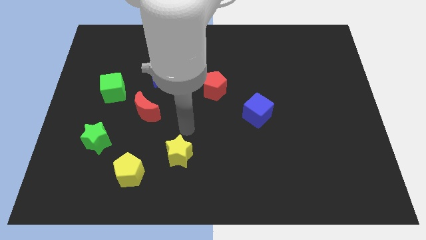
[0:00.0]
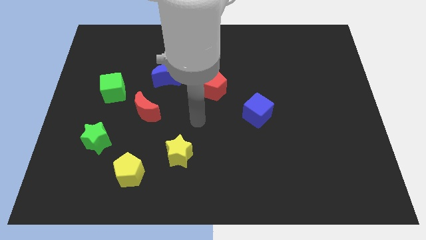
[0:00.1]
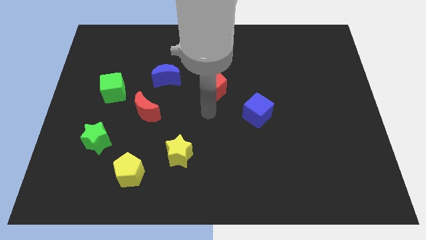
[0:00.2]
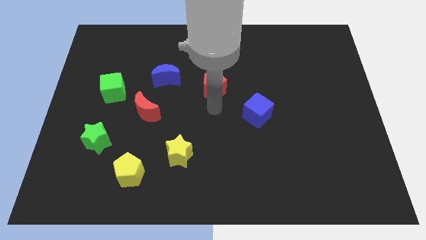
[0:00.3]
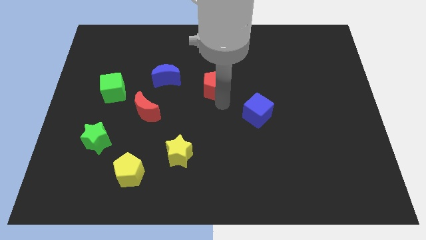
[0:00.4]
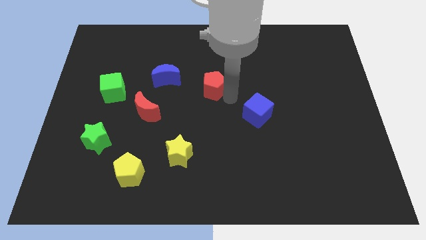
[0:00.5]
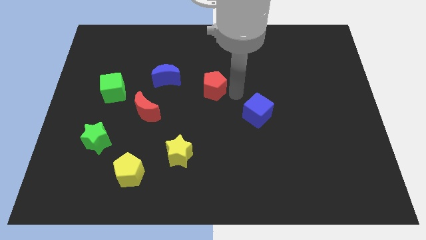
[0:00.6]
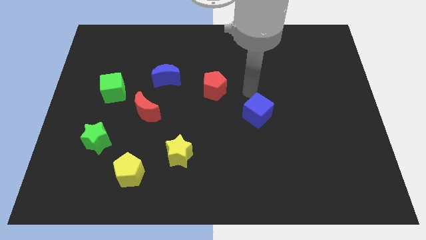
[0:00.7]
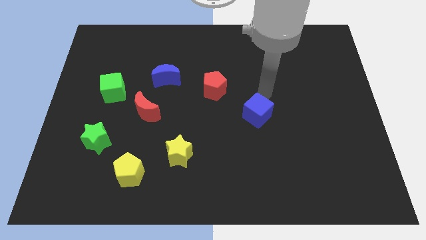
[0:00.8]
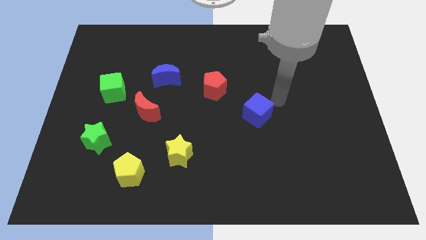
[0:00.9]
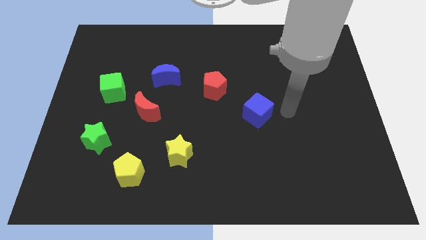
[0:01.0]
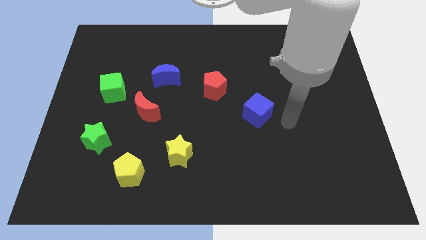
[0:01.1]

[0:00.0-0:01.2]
move your arm towards the right side of the blue cube

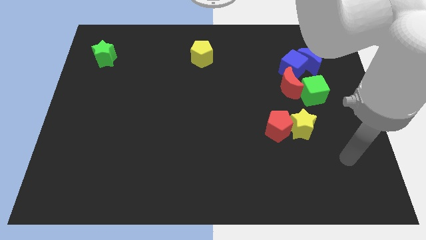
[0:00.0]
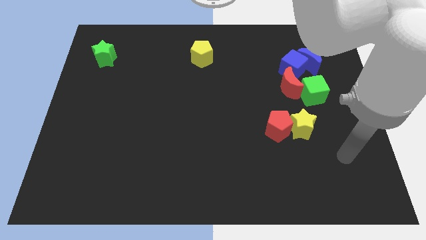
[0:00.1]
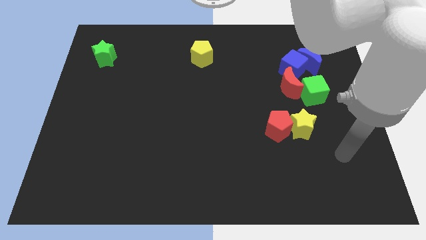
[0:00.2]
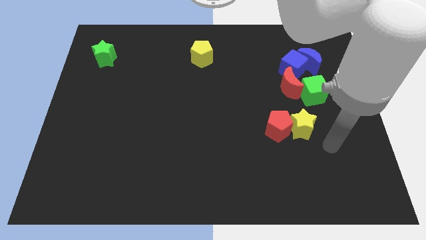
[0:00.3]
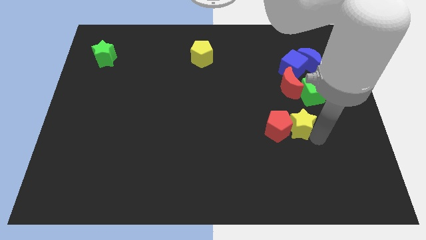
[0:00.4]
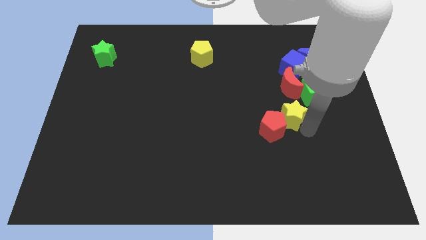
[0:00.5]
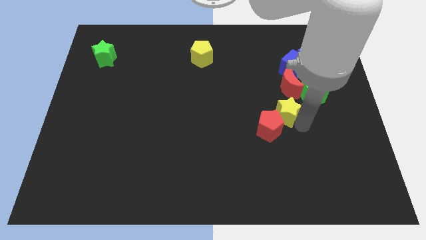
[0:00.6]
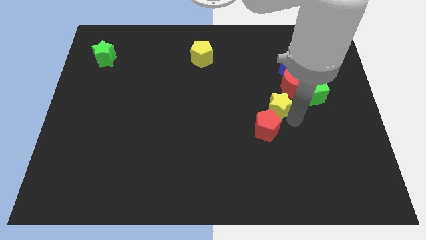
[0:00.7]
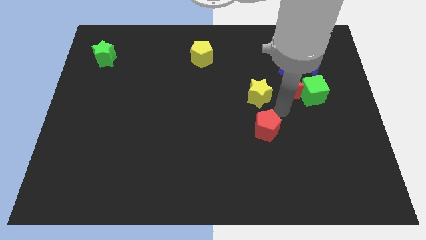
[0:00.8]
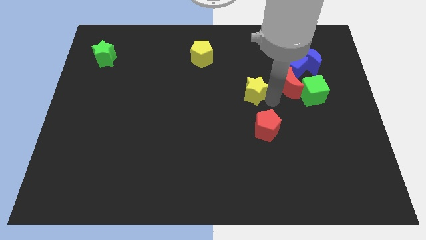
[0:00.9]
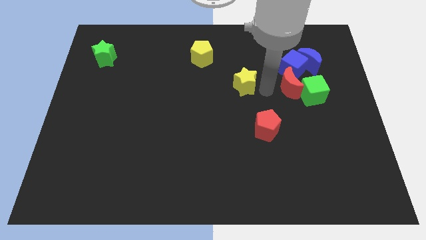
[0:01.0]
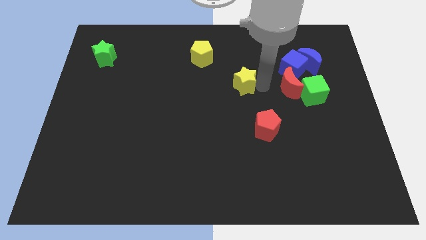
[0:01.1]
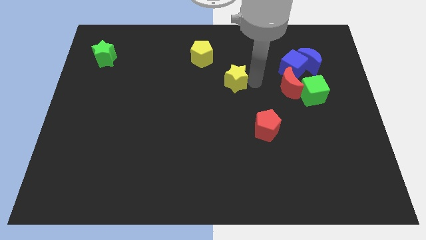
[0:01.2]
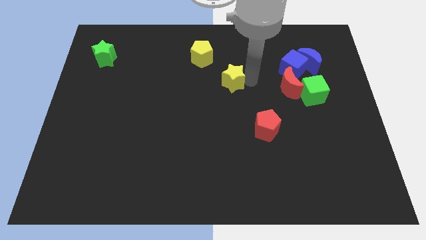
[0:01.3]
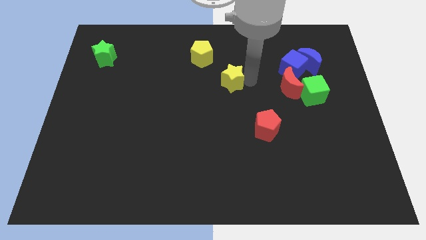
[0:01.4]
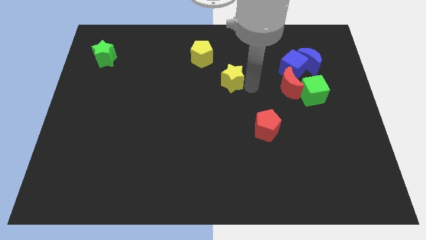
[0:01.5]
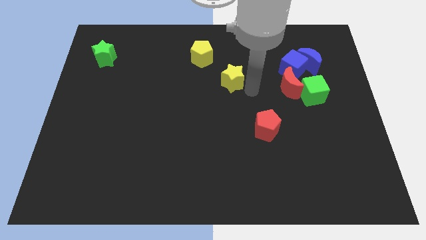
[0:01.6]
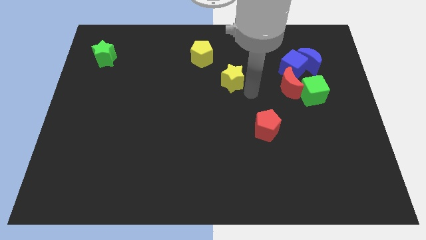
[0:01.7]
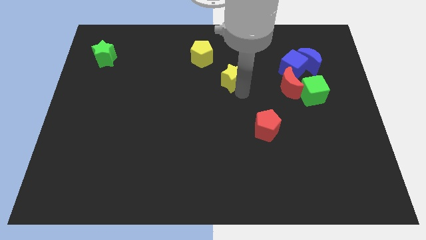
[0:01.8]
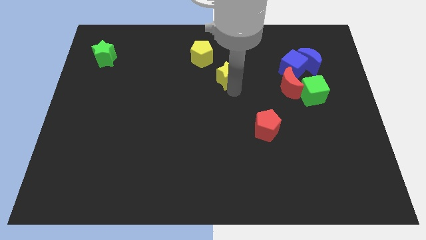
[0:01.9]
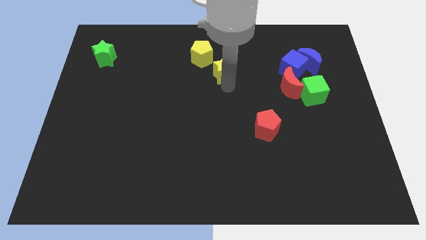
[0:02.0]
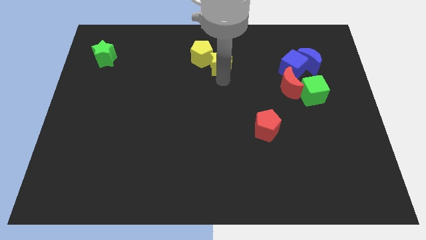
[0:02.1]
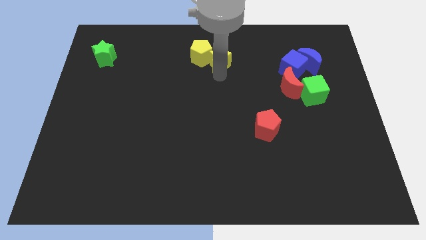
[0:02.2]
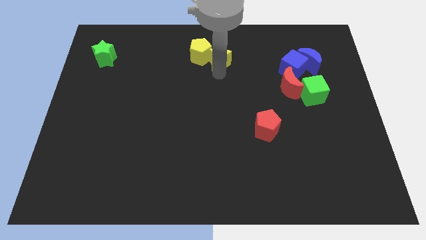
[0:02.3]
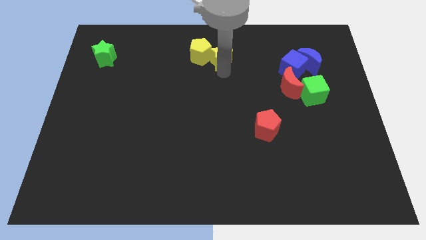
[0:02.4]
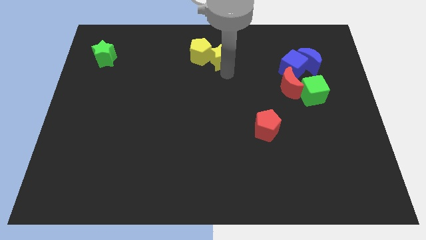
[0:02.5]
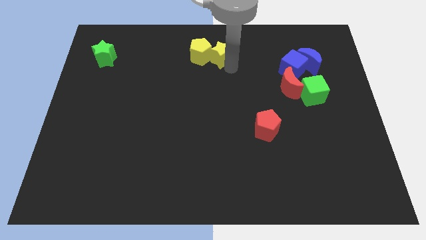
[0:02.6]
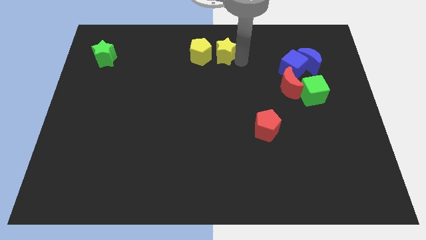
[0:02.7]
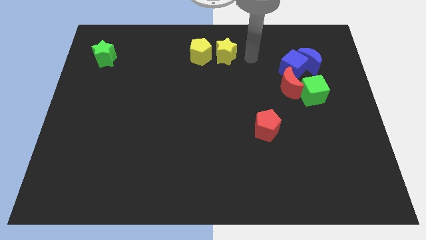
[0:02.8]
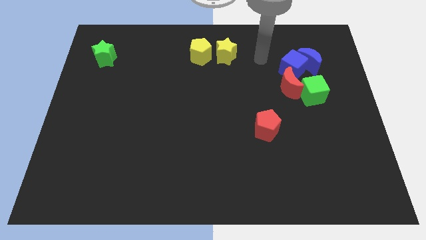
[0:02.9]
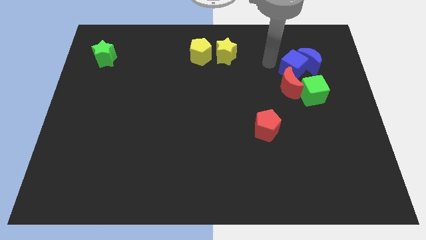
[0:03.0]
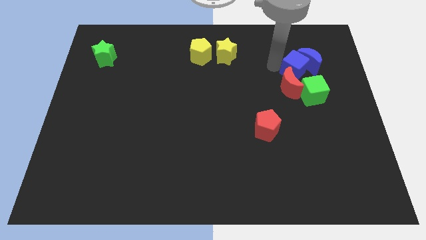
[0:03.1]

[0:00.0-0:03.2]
move the yellow star into the yellow pentagon

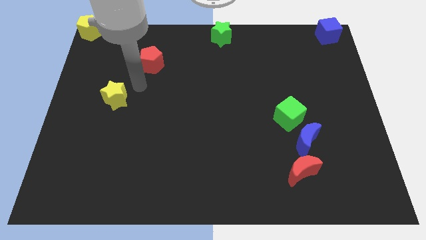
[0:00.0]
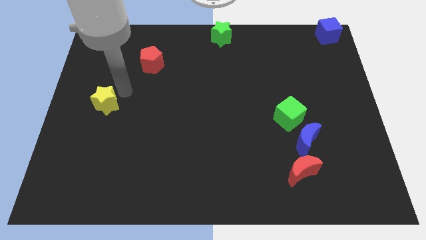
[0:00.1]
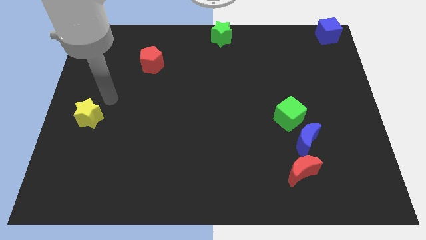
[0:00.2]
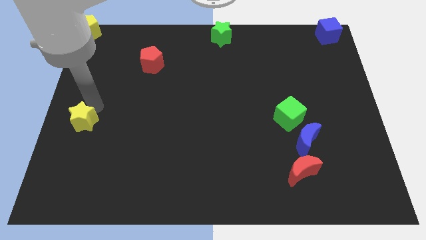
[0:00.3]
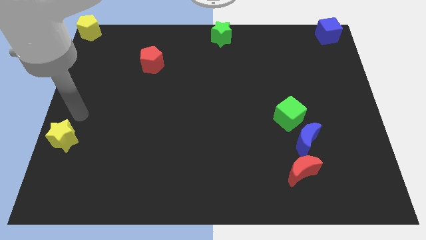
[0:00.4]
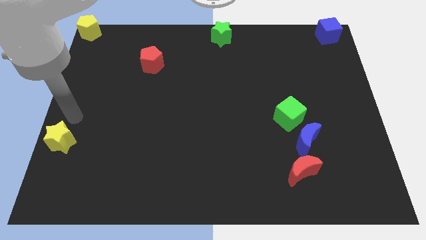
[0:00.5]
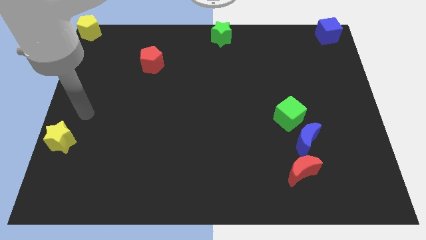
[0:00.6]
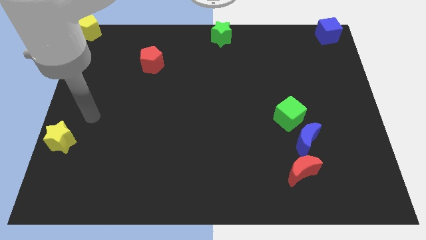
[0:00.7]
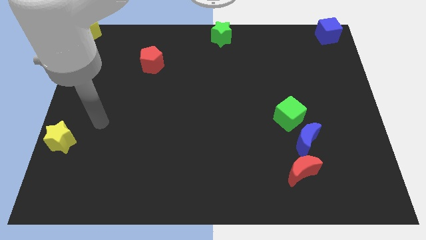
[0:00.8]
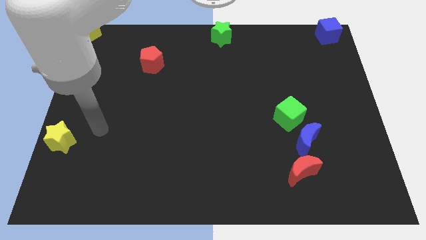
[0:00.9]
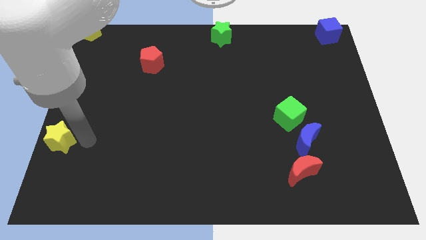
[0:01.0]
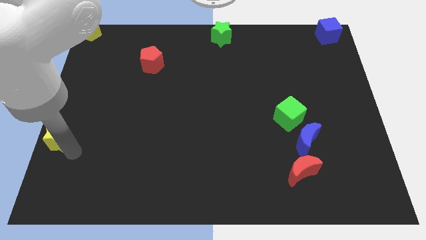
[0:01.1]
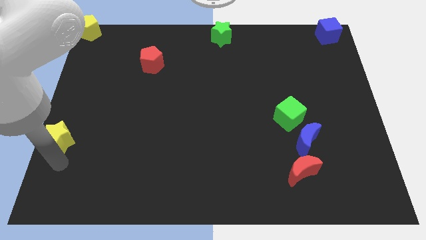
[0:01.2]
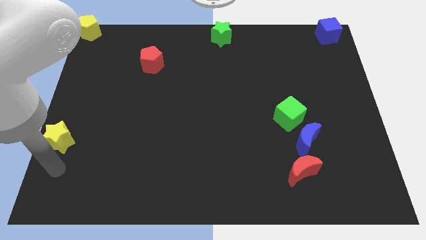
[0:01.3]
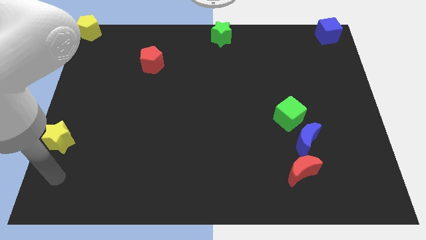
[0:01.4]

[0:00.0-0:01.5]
place the yellow star vertically below the yellow pentagon

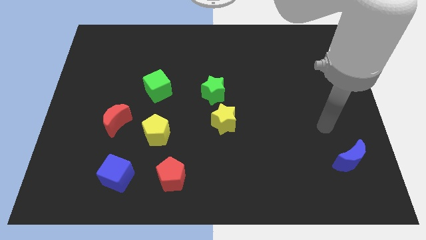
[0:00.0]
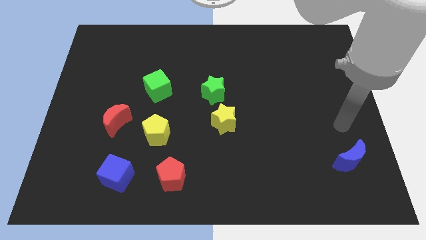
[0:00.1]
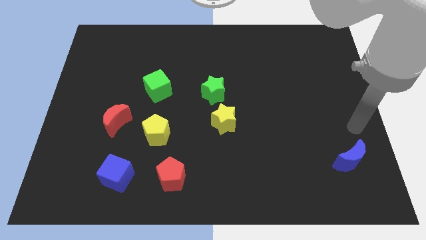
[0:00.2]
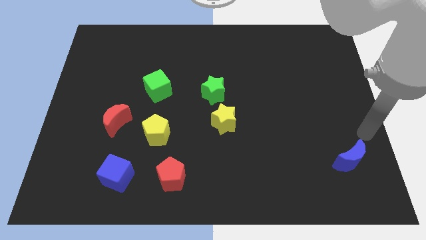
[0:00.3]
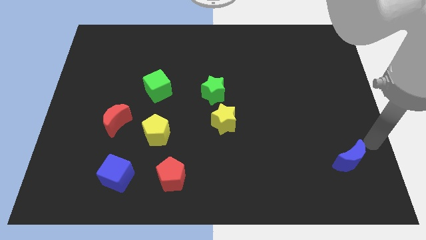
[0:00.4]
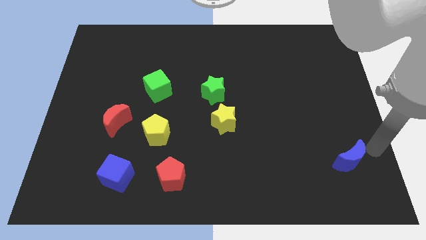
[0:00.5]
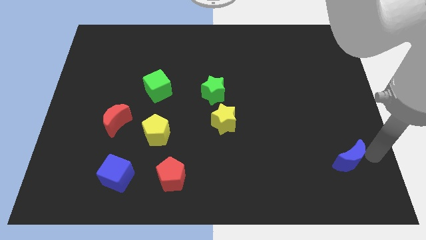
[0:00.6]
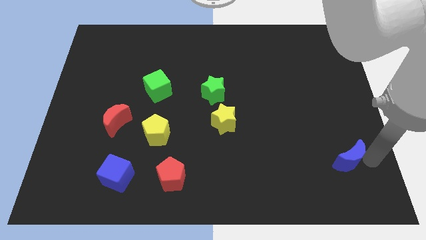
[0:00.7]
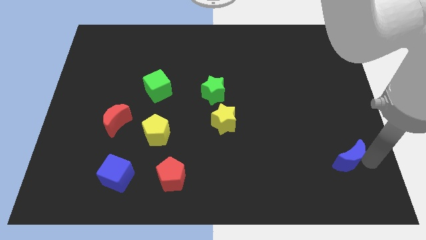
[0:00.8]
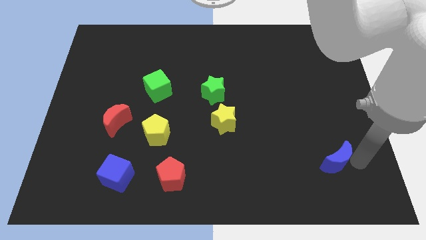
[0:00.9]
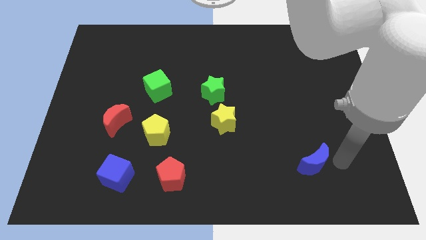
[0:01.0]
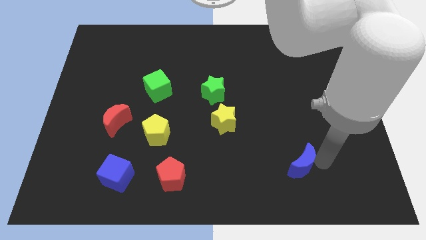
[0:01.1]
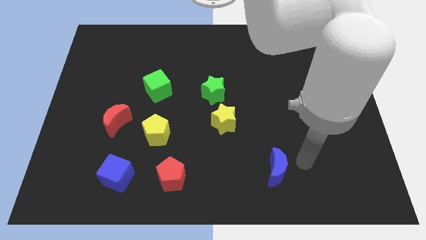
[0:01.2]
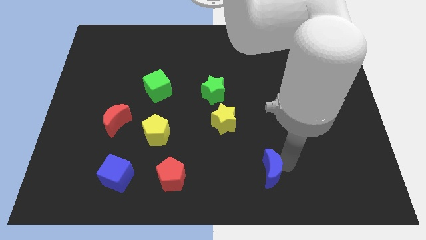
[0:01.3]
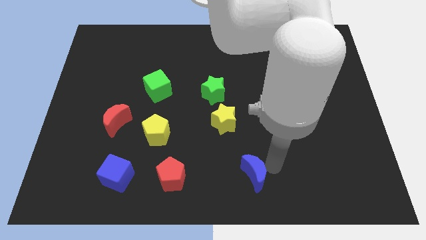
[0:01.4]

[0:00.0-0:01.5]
push the blue moon horizontally to the right side of the red pentagon

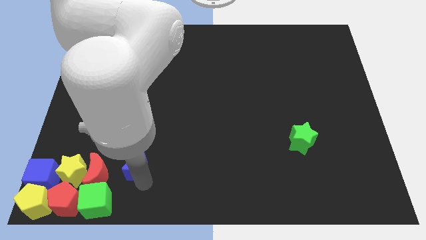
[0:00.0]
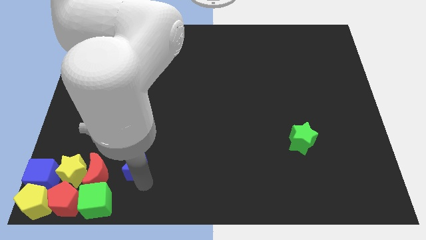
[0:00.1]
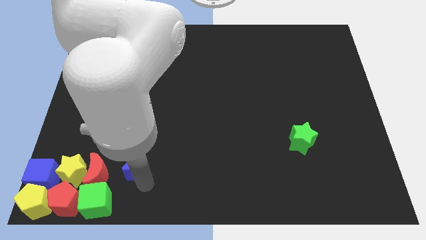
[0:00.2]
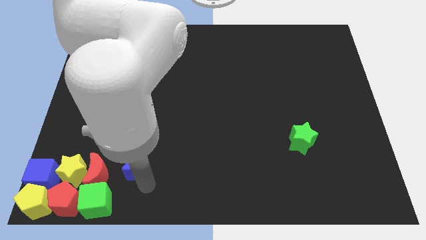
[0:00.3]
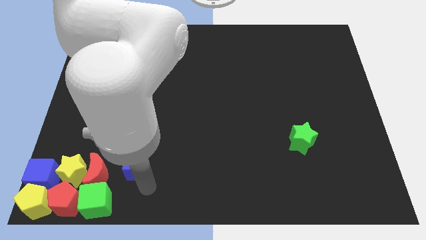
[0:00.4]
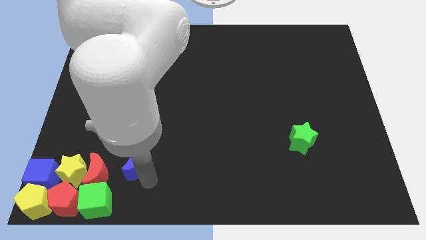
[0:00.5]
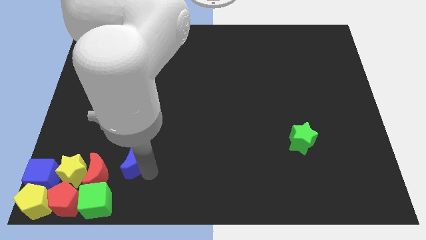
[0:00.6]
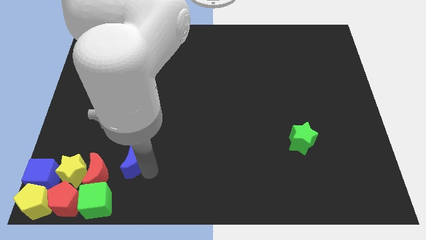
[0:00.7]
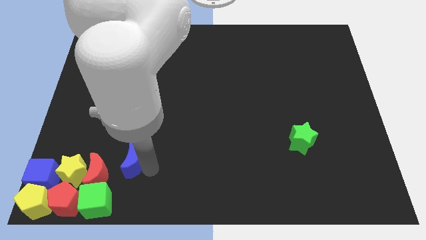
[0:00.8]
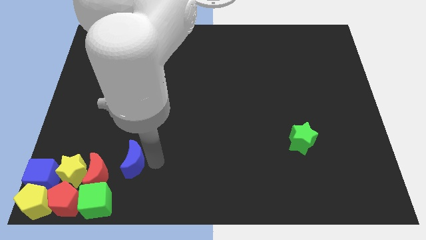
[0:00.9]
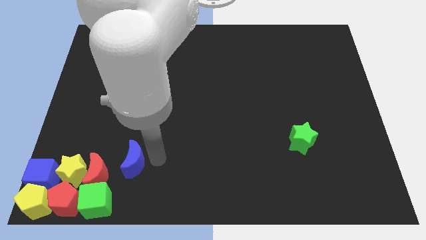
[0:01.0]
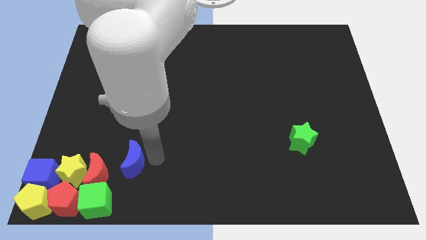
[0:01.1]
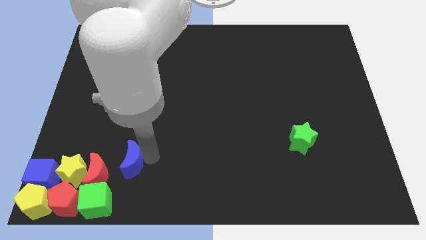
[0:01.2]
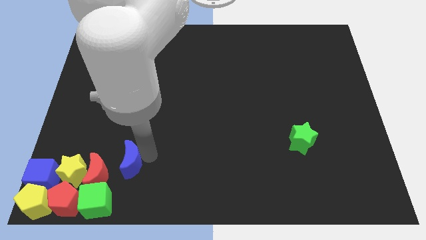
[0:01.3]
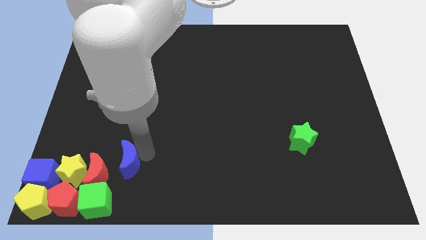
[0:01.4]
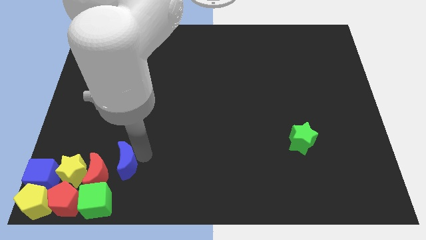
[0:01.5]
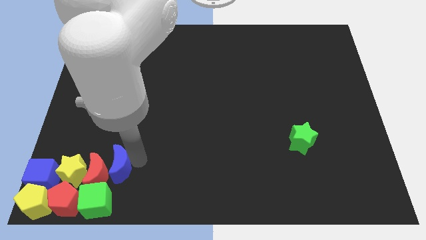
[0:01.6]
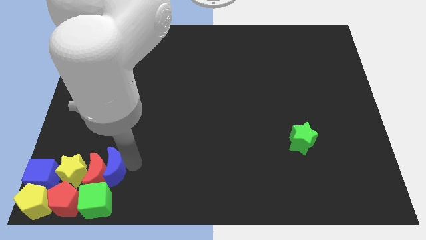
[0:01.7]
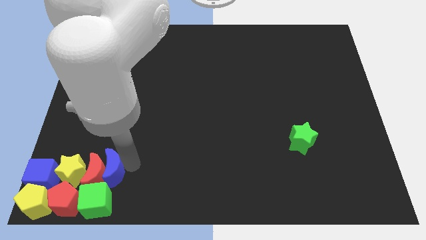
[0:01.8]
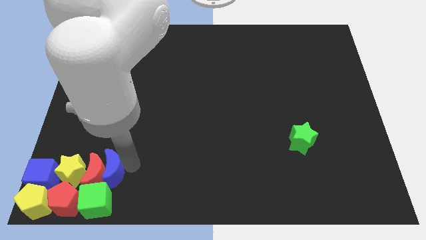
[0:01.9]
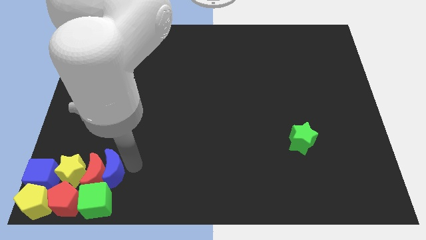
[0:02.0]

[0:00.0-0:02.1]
place the blue moon in a vertical line
